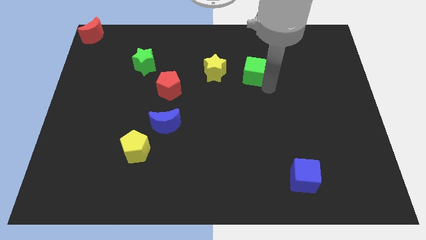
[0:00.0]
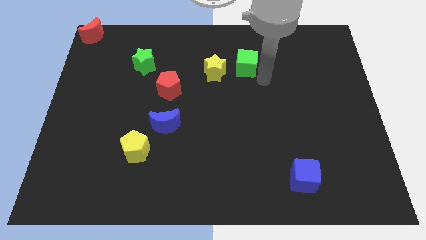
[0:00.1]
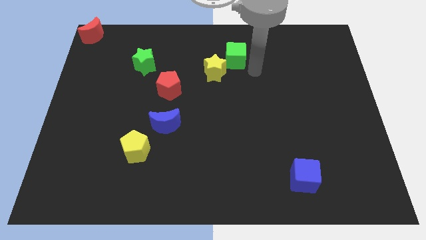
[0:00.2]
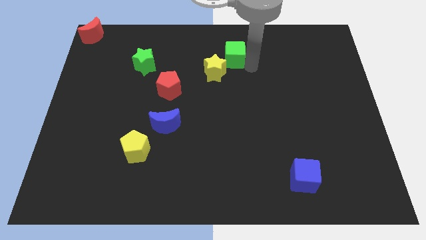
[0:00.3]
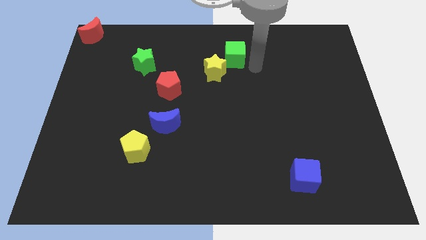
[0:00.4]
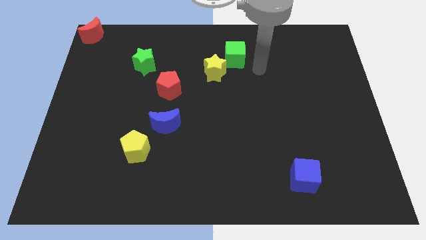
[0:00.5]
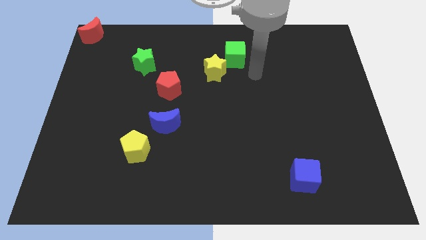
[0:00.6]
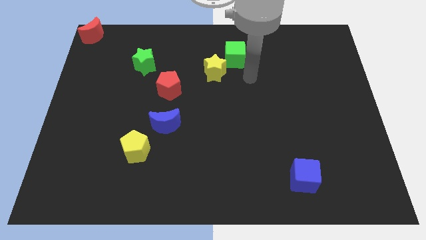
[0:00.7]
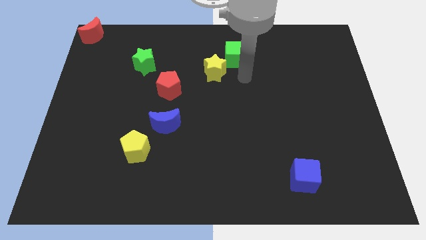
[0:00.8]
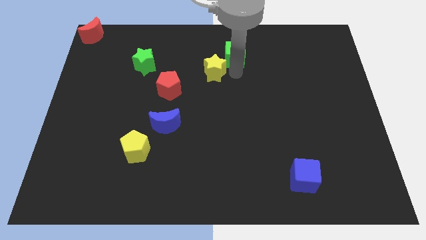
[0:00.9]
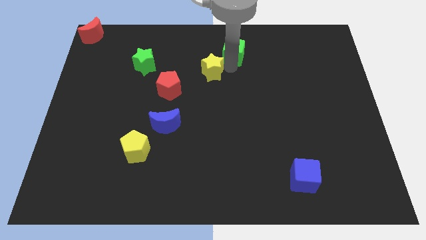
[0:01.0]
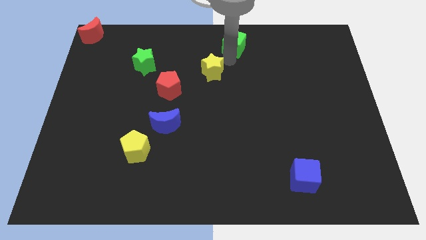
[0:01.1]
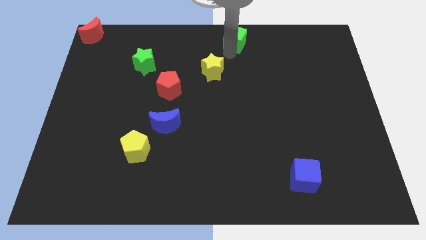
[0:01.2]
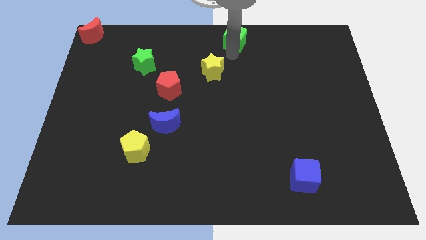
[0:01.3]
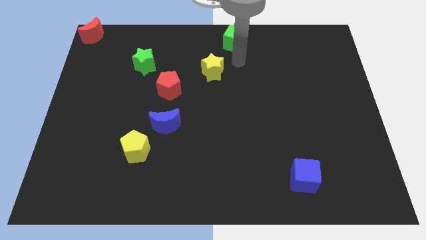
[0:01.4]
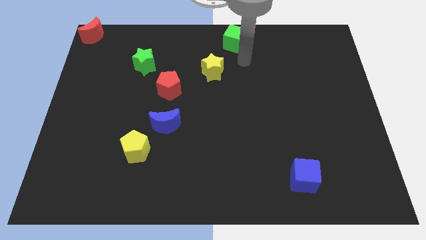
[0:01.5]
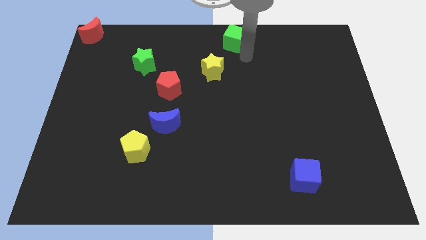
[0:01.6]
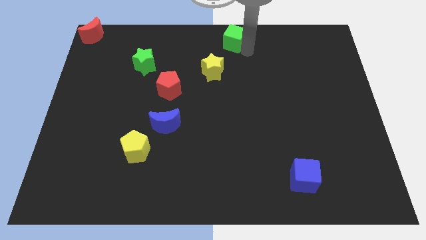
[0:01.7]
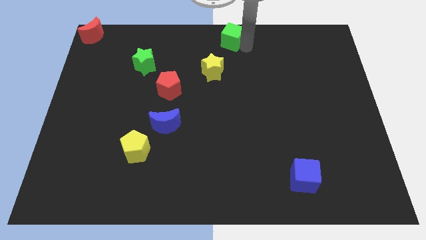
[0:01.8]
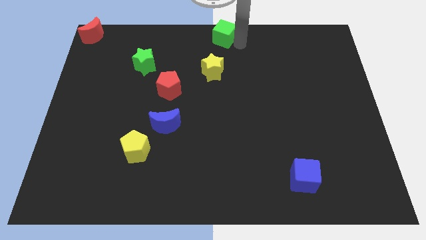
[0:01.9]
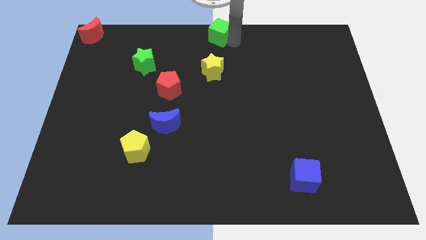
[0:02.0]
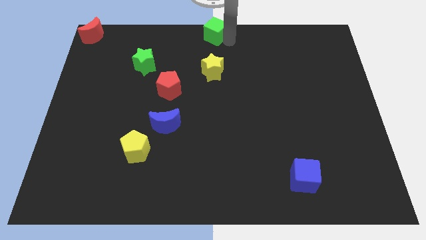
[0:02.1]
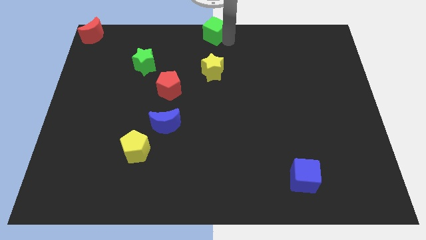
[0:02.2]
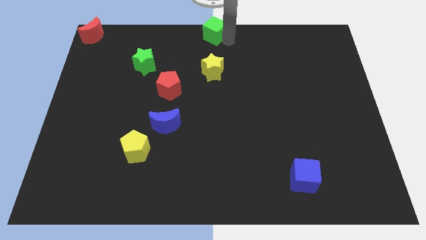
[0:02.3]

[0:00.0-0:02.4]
place the green cube above the yellow star

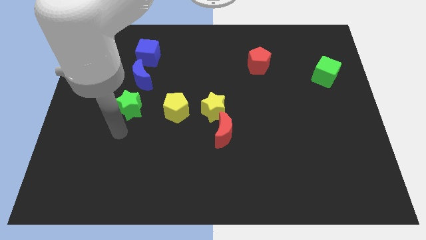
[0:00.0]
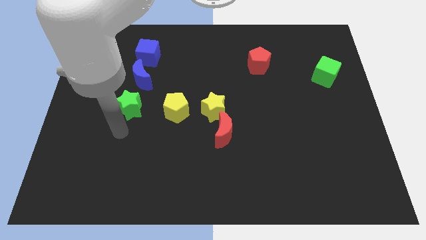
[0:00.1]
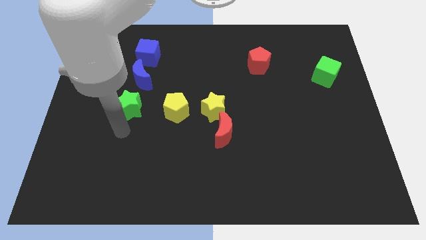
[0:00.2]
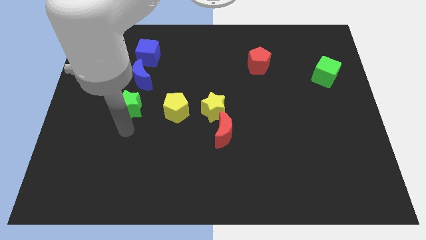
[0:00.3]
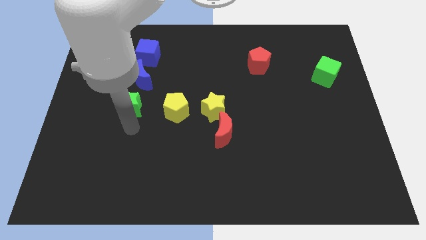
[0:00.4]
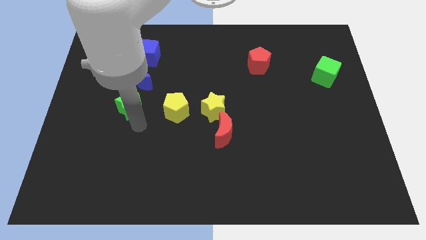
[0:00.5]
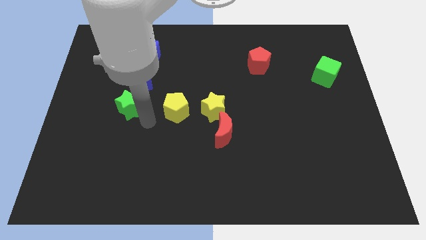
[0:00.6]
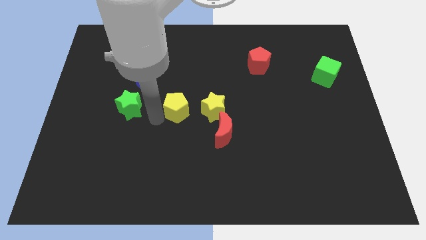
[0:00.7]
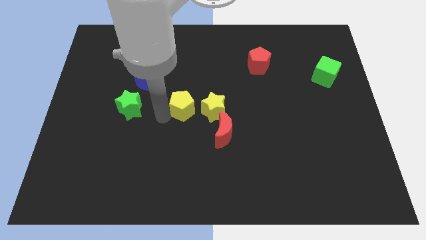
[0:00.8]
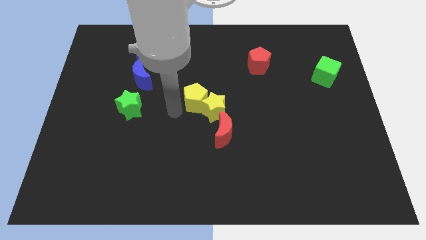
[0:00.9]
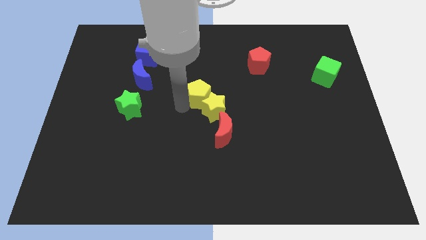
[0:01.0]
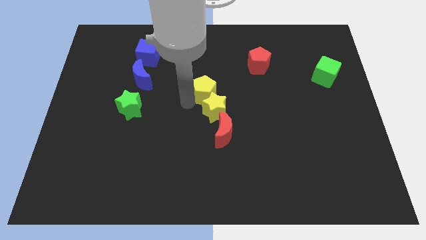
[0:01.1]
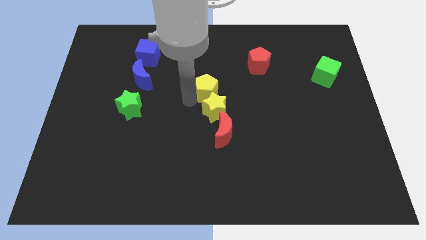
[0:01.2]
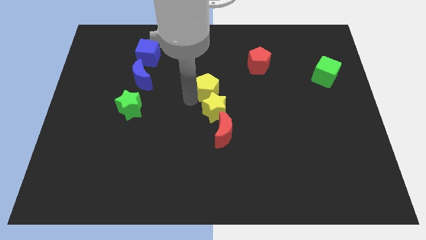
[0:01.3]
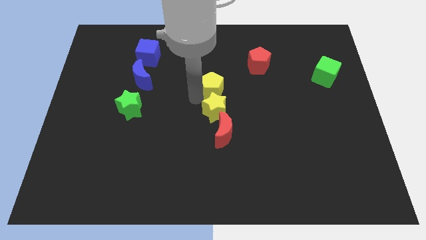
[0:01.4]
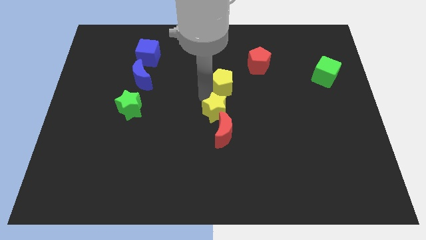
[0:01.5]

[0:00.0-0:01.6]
place yellow pentagon above the yellow star

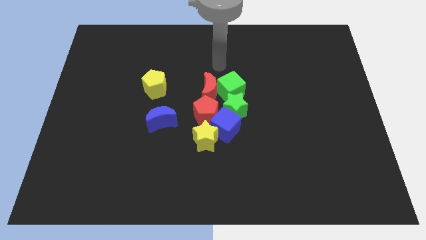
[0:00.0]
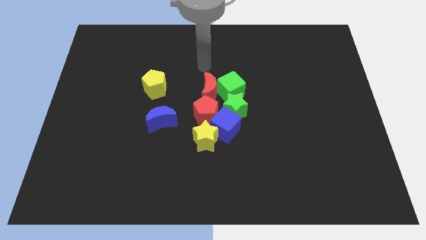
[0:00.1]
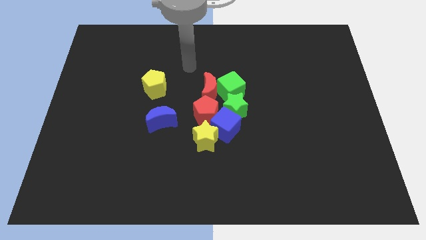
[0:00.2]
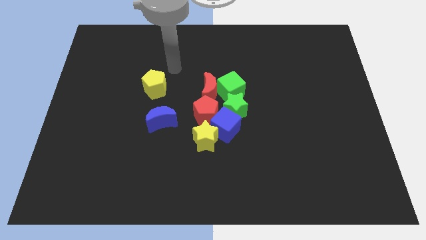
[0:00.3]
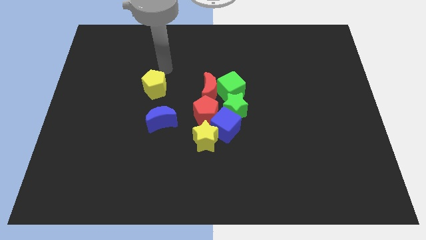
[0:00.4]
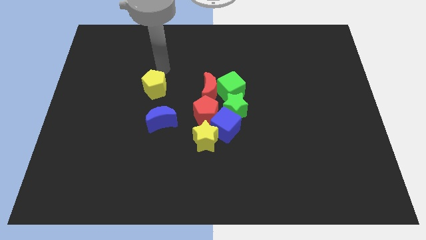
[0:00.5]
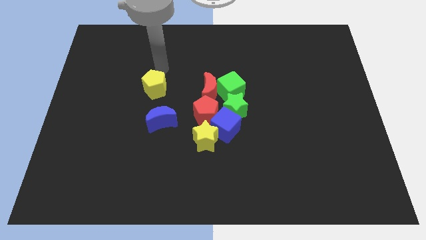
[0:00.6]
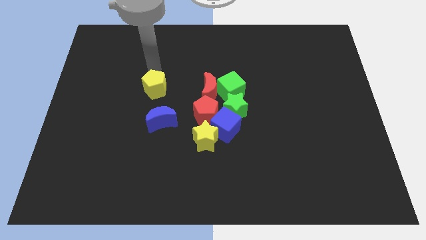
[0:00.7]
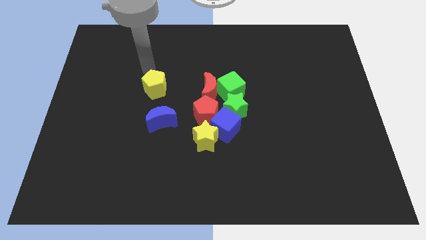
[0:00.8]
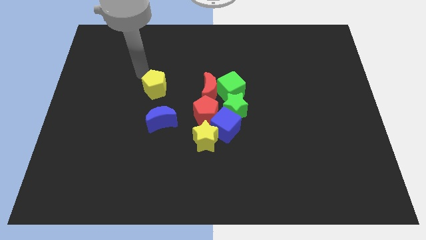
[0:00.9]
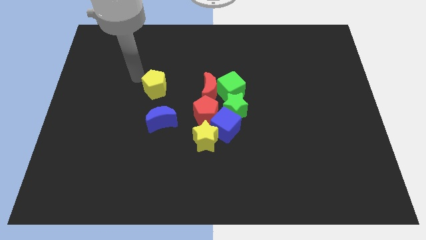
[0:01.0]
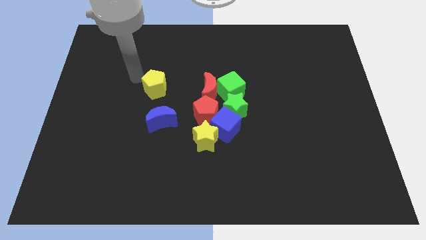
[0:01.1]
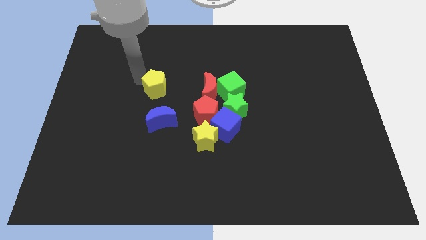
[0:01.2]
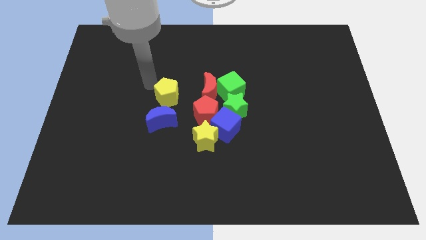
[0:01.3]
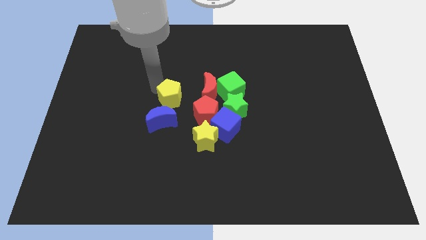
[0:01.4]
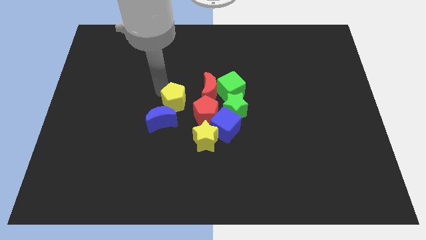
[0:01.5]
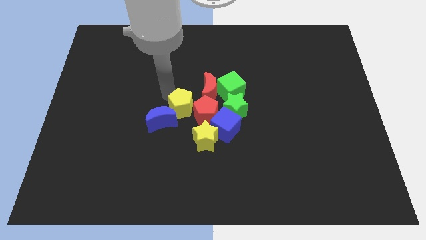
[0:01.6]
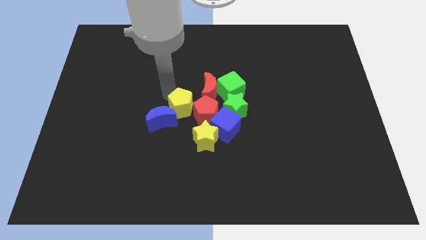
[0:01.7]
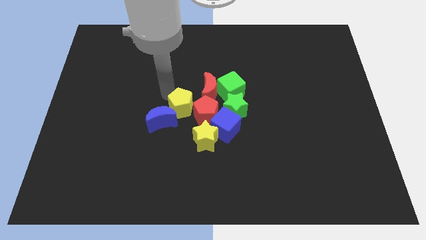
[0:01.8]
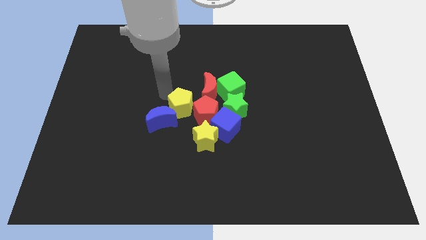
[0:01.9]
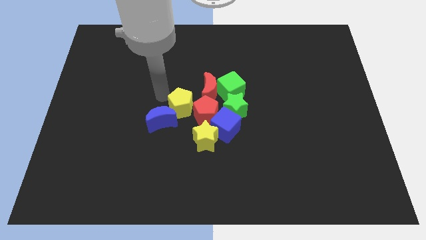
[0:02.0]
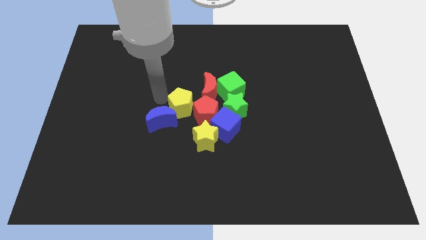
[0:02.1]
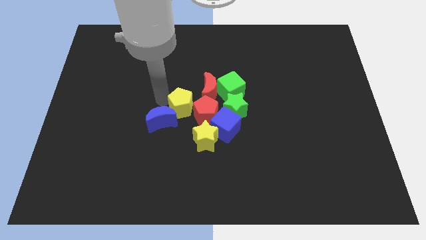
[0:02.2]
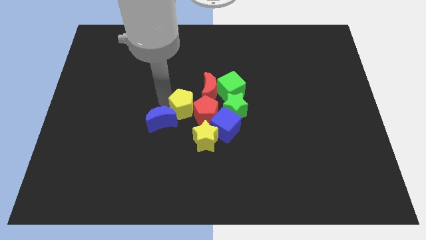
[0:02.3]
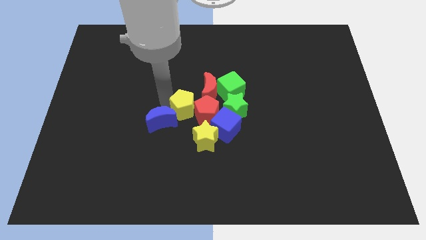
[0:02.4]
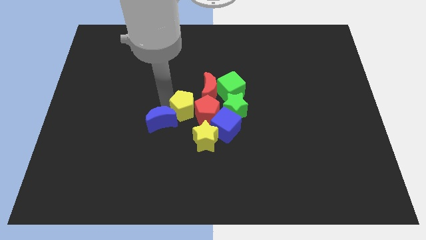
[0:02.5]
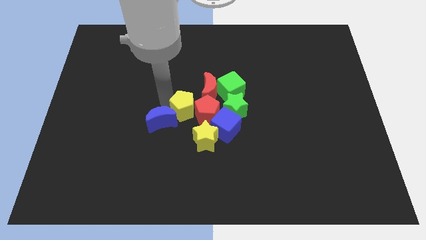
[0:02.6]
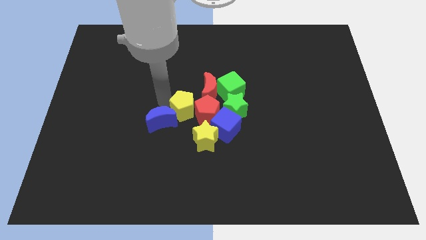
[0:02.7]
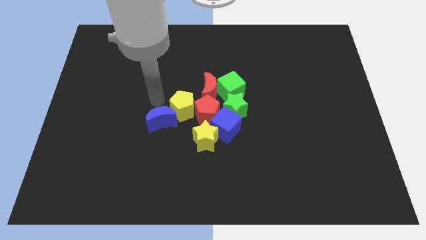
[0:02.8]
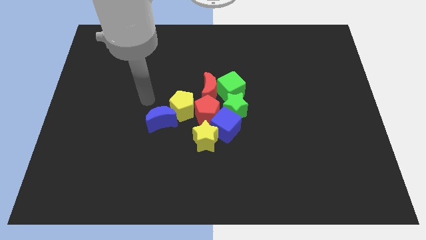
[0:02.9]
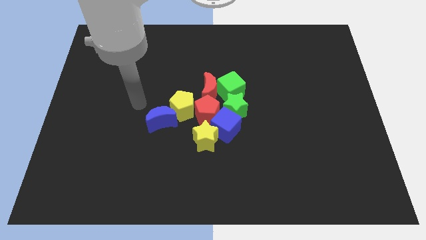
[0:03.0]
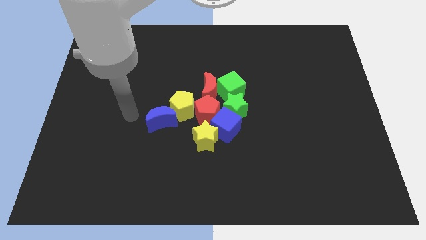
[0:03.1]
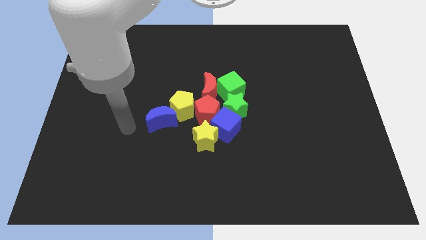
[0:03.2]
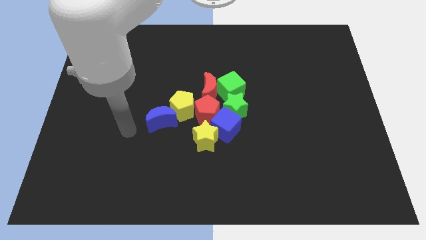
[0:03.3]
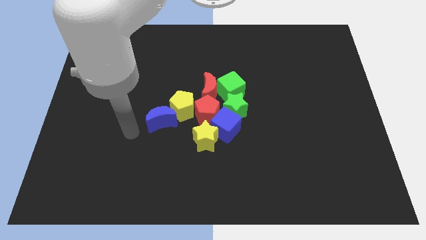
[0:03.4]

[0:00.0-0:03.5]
move the yellow pentagon into the red pentagon

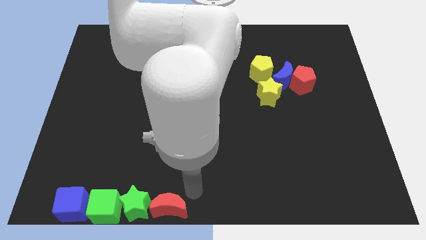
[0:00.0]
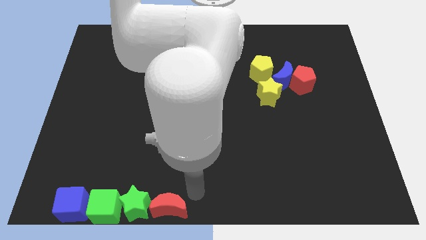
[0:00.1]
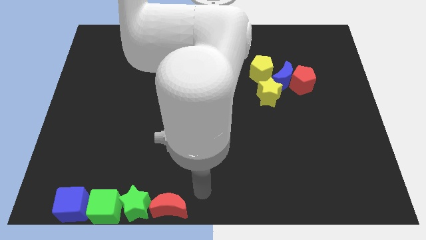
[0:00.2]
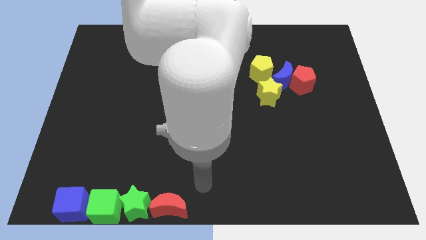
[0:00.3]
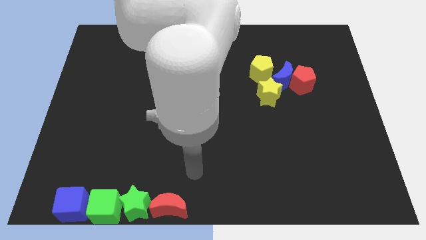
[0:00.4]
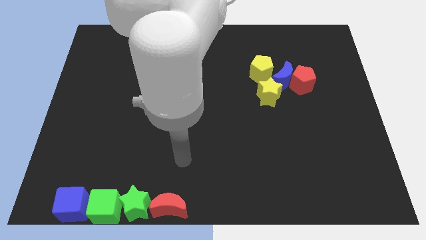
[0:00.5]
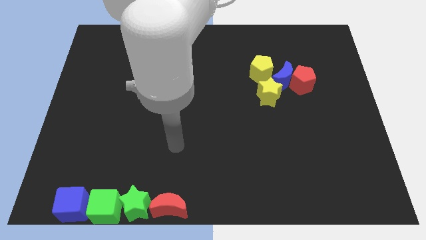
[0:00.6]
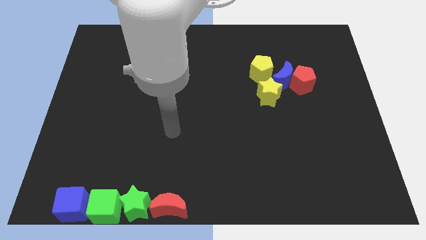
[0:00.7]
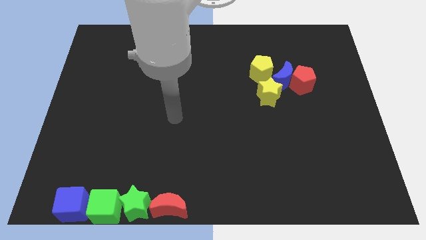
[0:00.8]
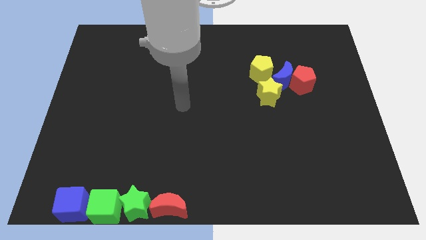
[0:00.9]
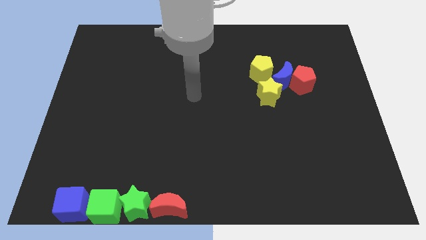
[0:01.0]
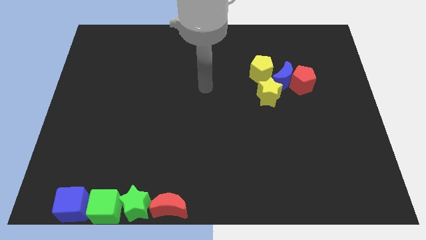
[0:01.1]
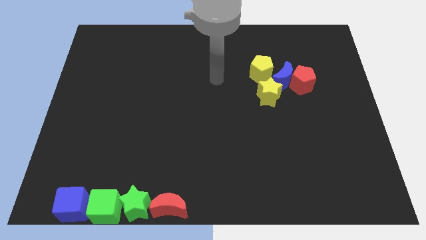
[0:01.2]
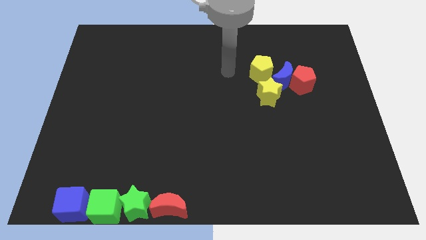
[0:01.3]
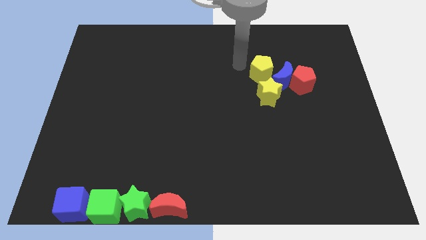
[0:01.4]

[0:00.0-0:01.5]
place your arm at the left of the yellow pentagon
